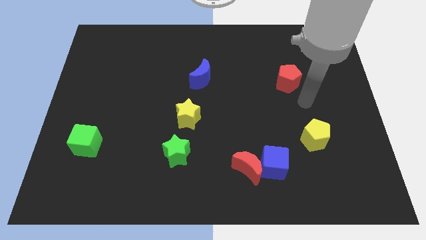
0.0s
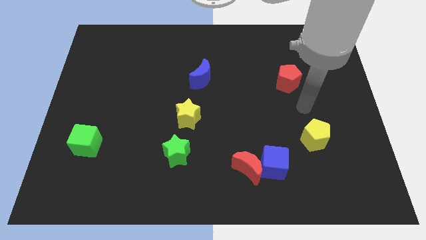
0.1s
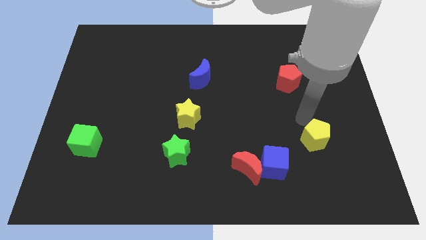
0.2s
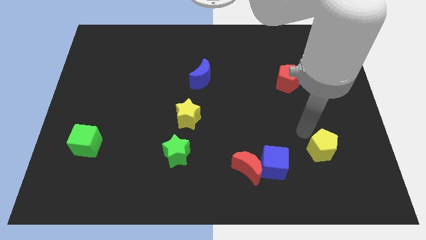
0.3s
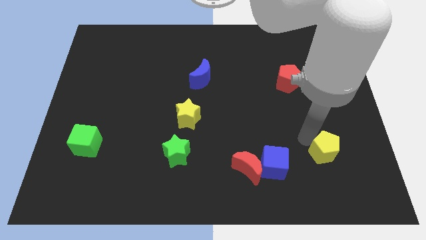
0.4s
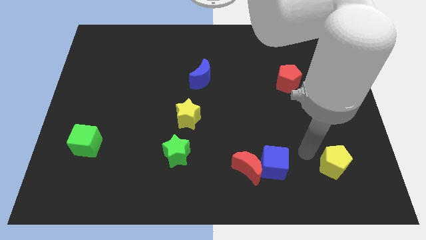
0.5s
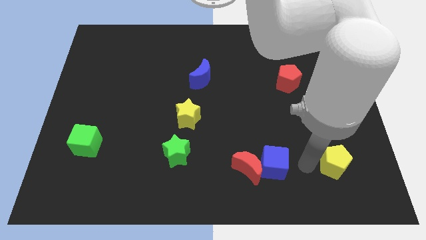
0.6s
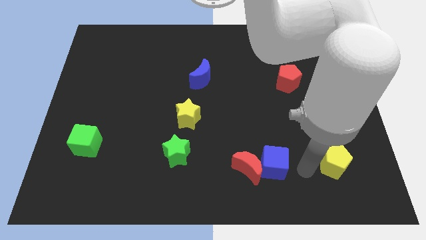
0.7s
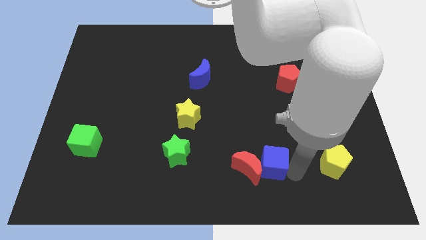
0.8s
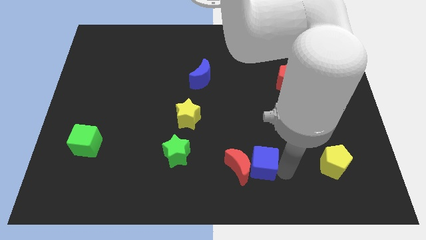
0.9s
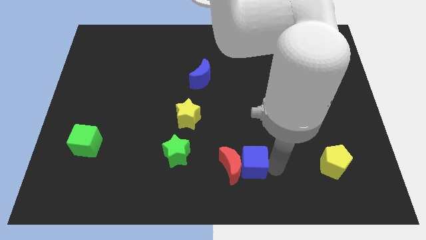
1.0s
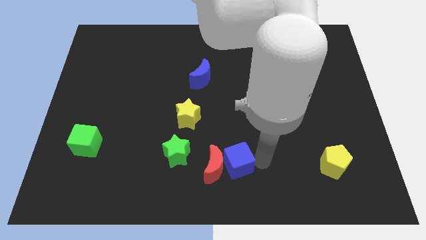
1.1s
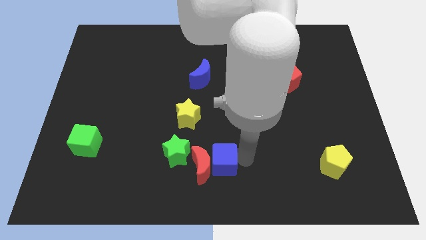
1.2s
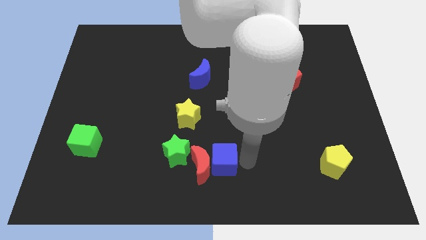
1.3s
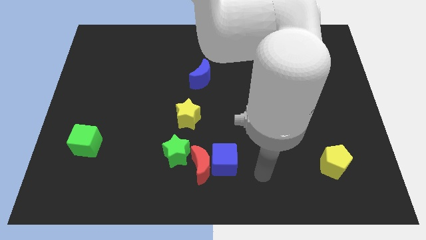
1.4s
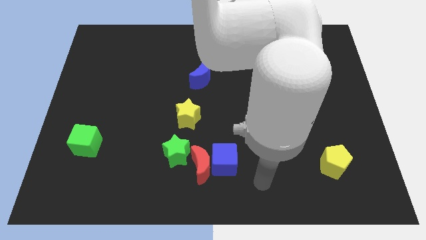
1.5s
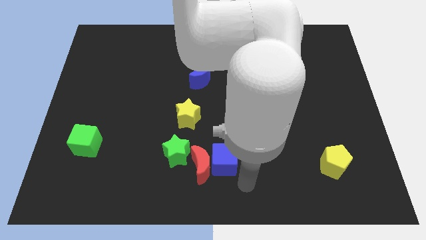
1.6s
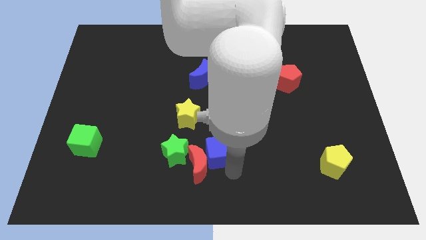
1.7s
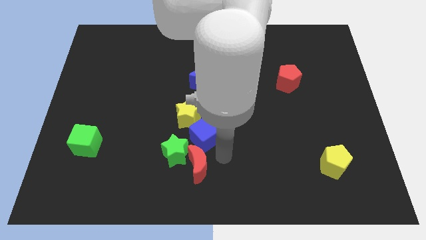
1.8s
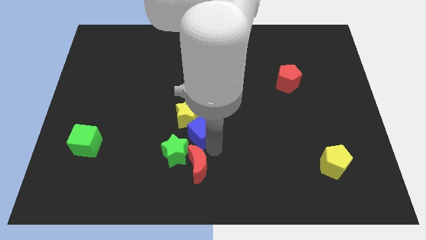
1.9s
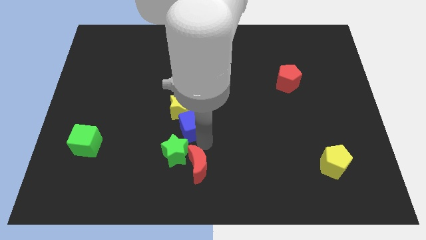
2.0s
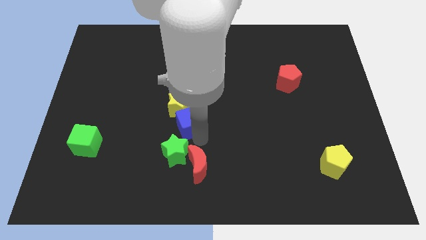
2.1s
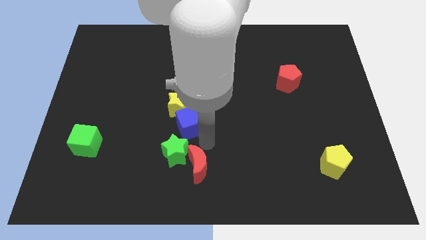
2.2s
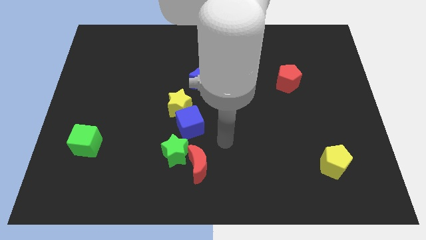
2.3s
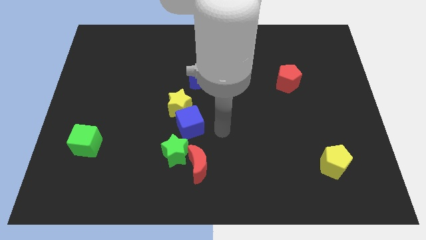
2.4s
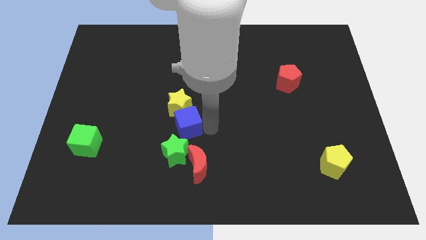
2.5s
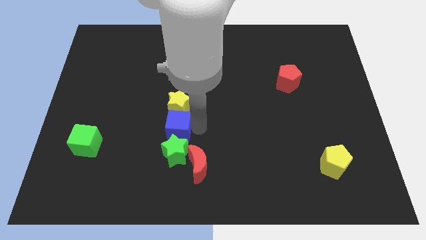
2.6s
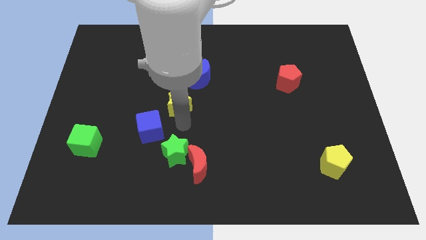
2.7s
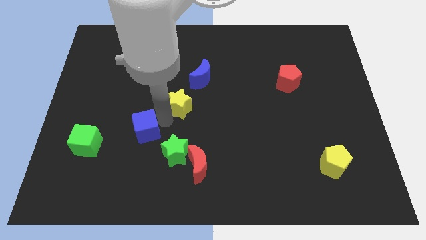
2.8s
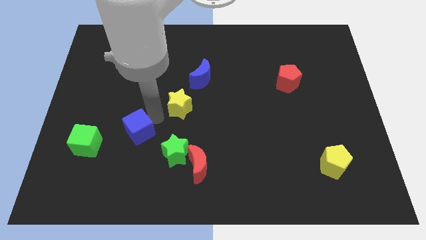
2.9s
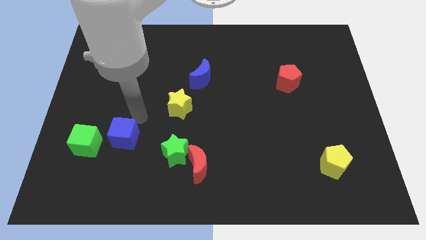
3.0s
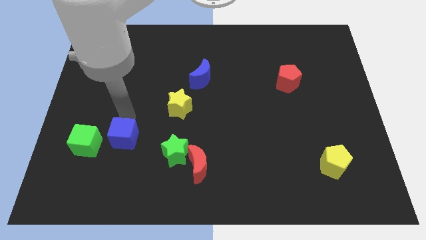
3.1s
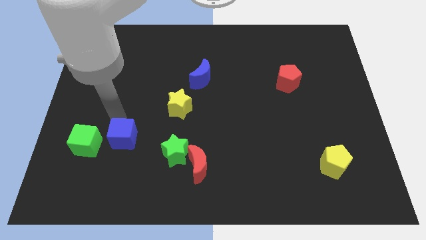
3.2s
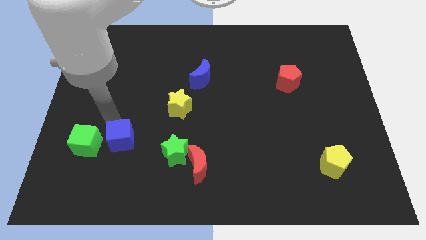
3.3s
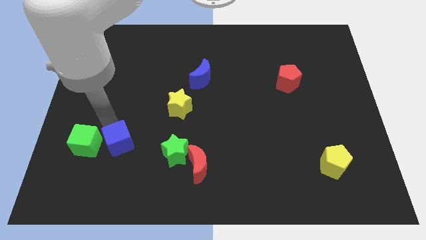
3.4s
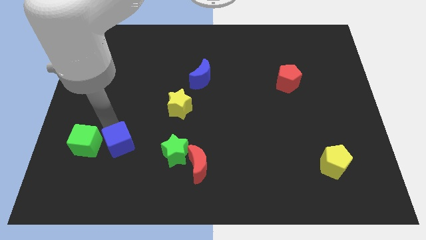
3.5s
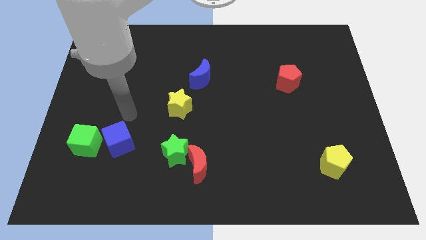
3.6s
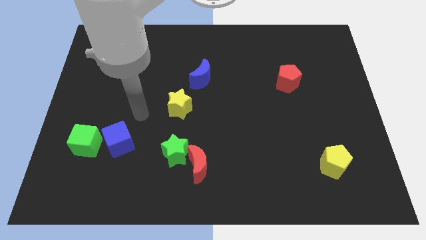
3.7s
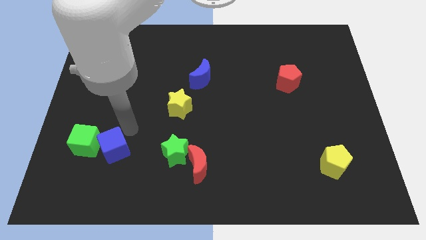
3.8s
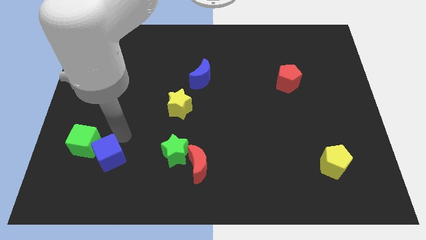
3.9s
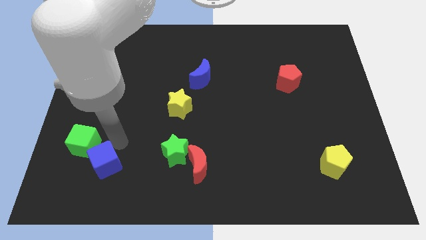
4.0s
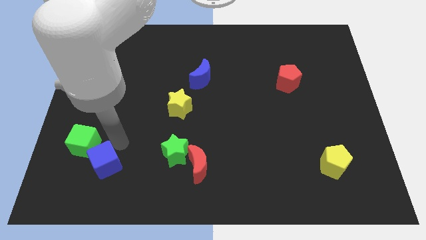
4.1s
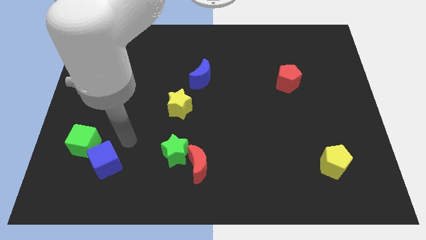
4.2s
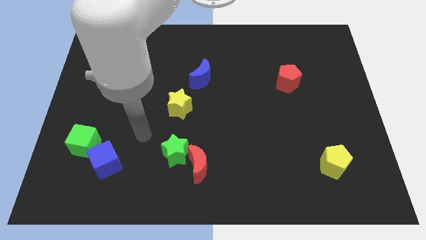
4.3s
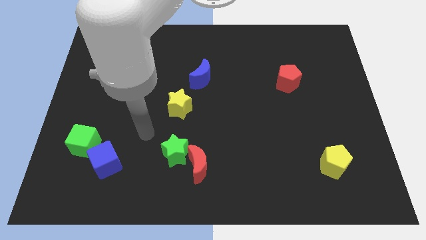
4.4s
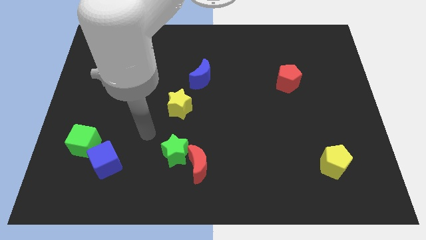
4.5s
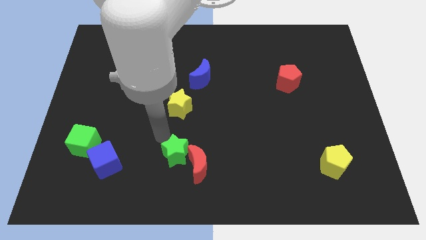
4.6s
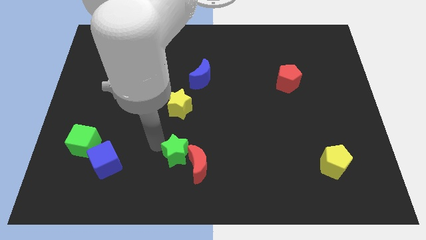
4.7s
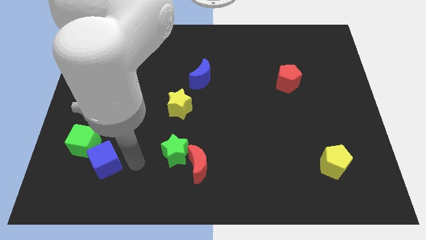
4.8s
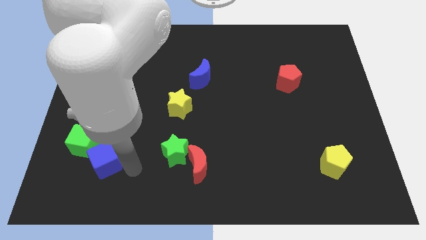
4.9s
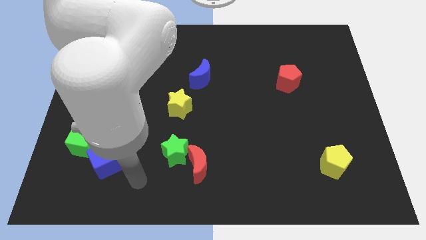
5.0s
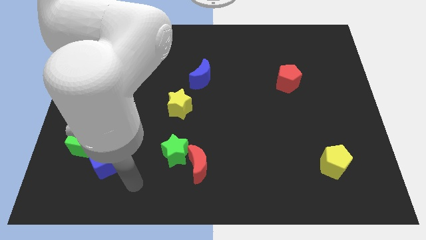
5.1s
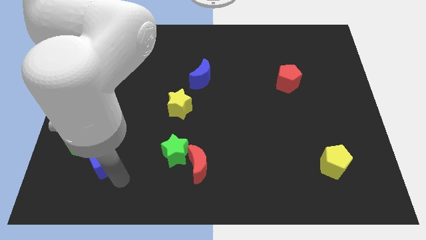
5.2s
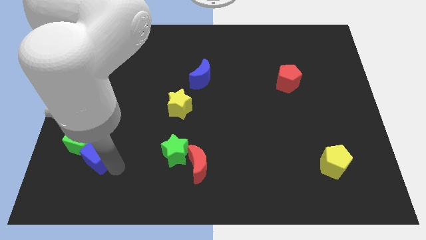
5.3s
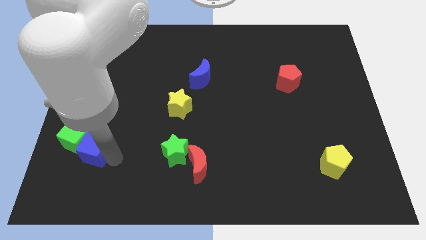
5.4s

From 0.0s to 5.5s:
push the blue cube next to the green cube

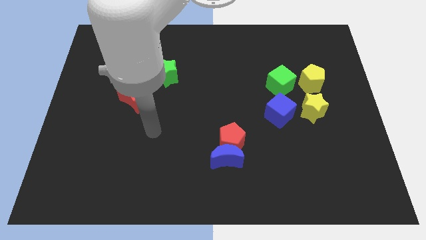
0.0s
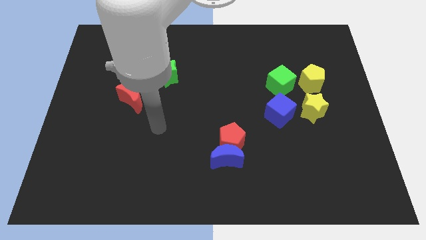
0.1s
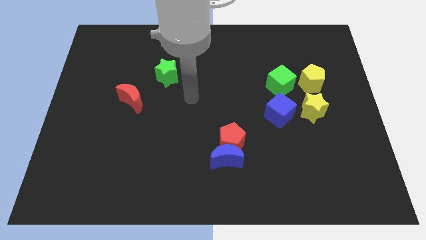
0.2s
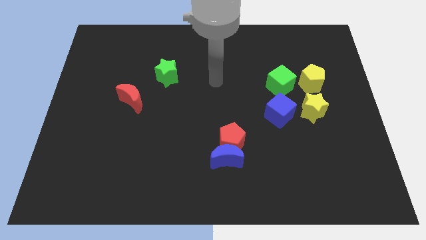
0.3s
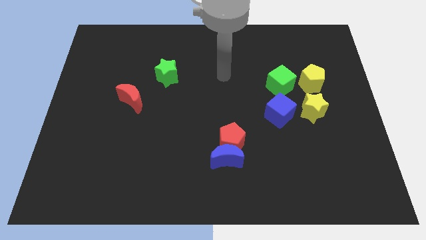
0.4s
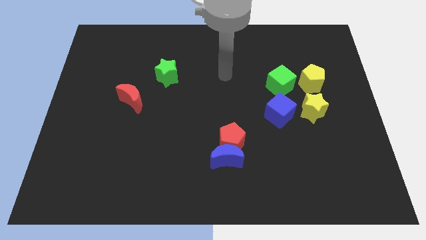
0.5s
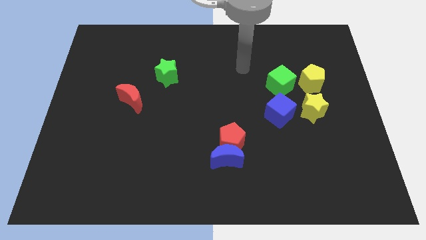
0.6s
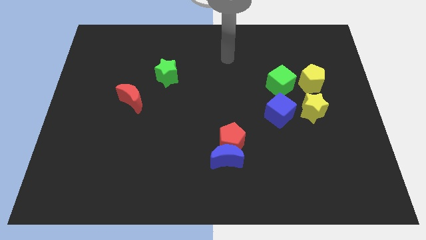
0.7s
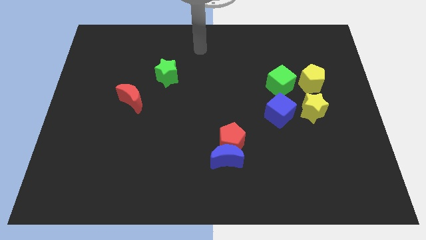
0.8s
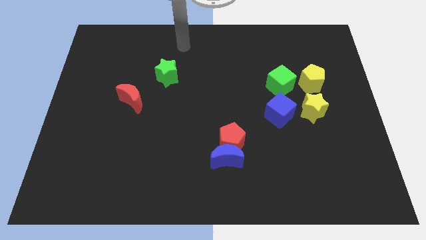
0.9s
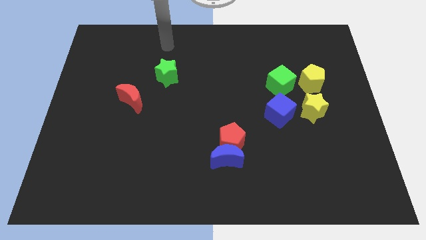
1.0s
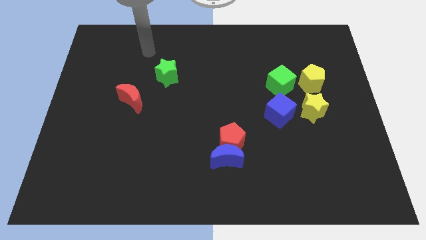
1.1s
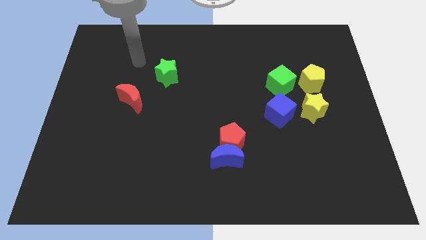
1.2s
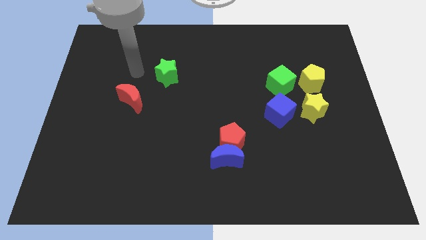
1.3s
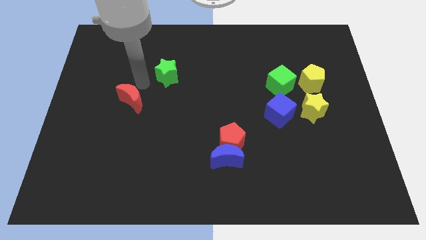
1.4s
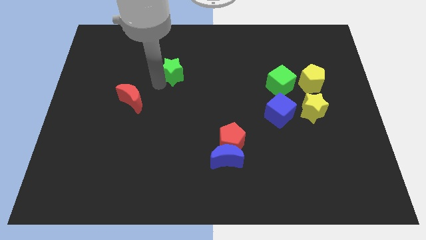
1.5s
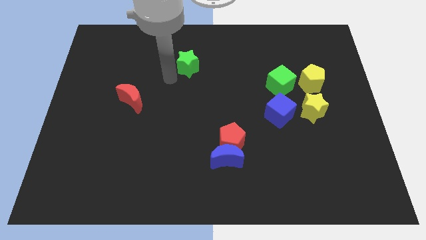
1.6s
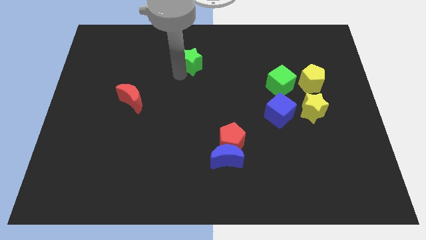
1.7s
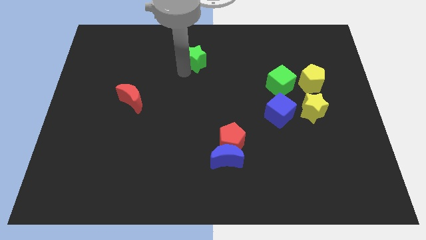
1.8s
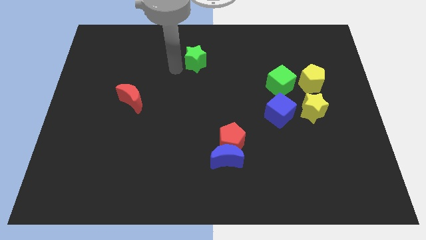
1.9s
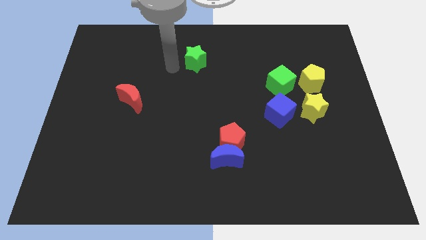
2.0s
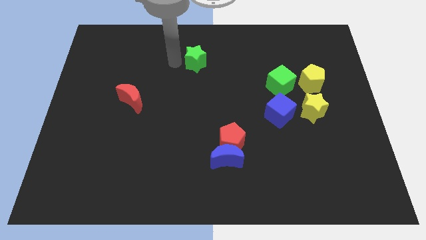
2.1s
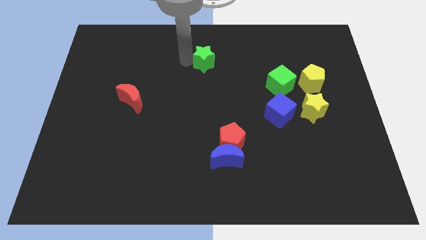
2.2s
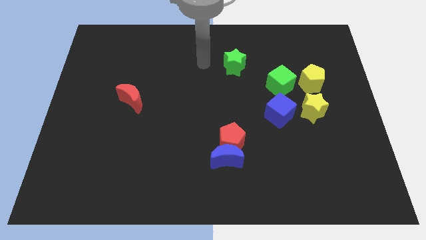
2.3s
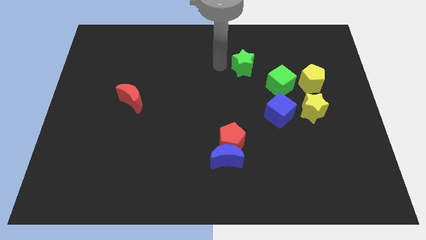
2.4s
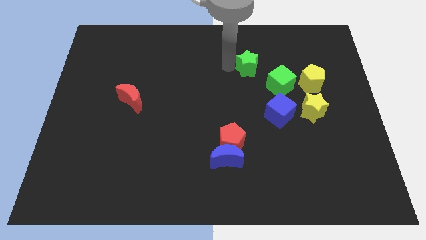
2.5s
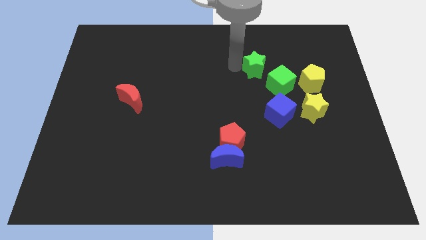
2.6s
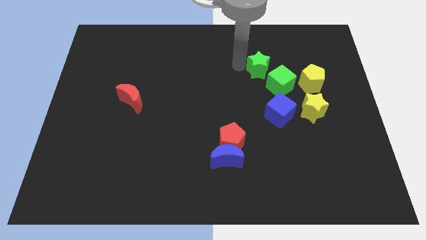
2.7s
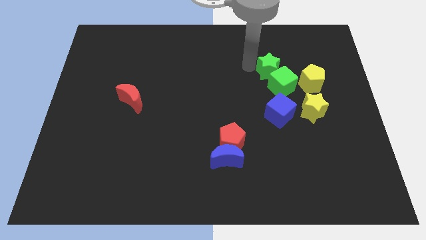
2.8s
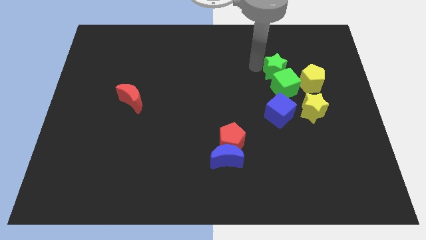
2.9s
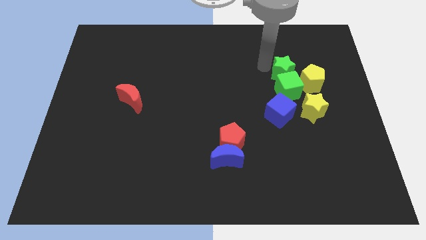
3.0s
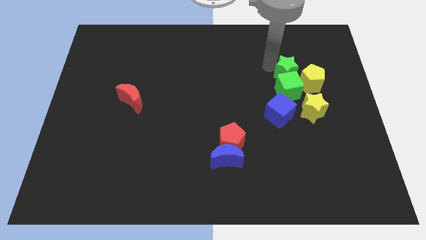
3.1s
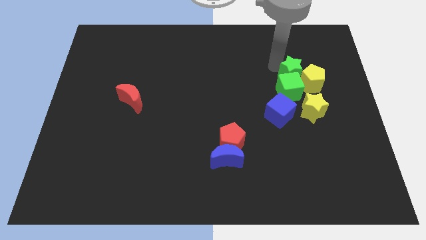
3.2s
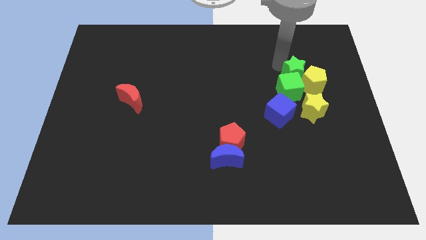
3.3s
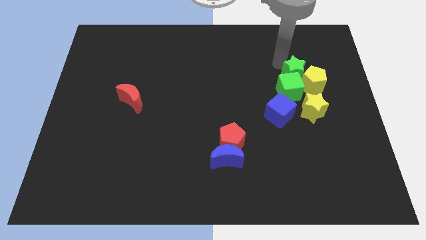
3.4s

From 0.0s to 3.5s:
move the green star to the yellow pentagon
